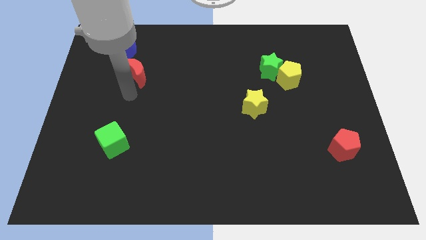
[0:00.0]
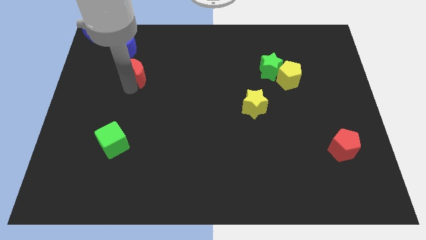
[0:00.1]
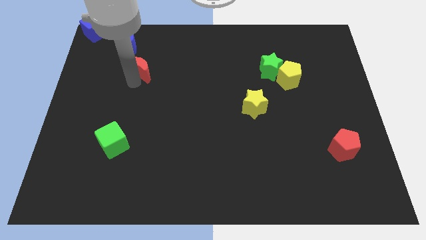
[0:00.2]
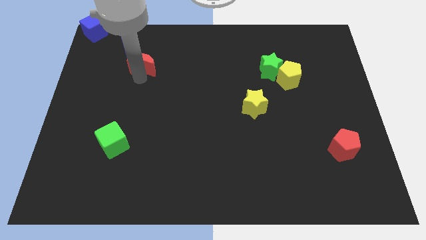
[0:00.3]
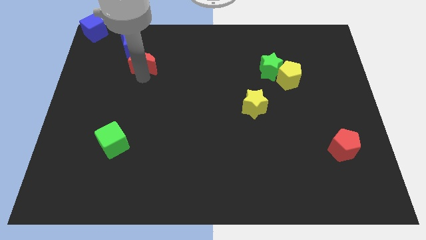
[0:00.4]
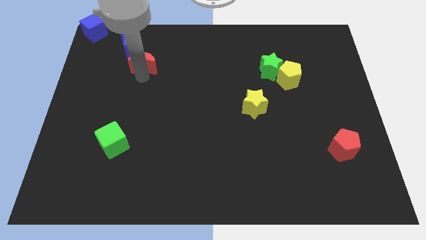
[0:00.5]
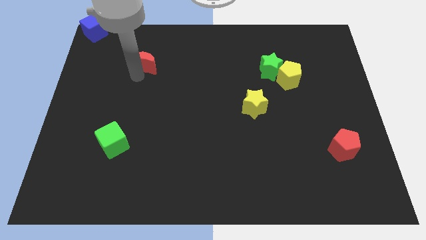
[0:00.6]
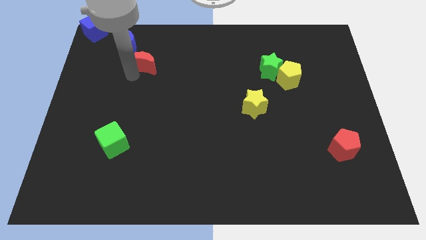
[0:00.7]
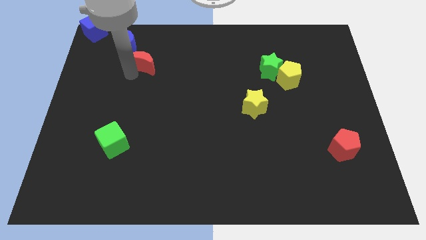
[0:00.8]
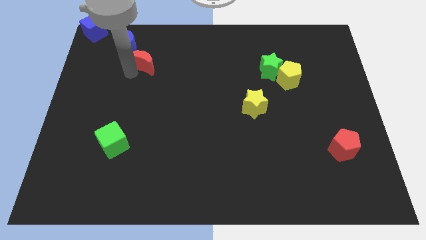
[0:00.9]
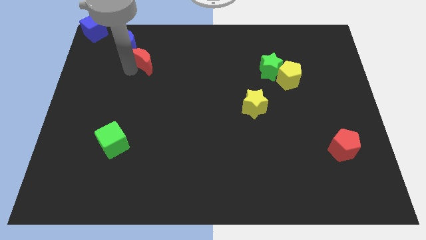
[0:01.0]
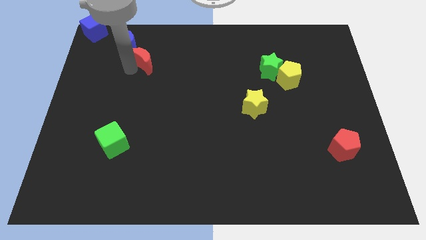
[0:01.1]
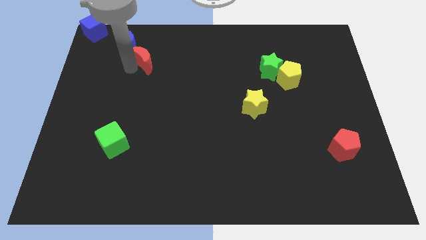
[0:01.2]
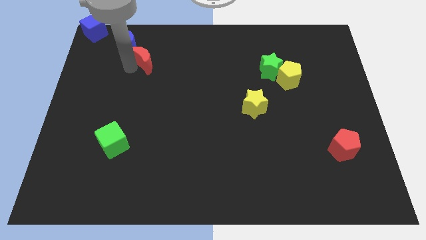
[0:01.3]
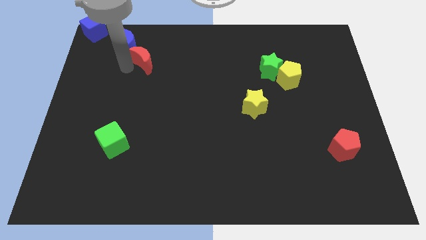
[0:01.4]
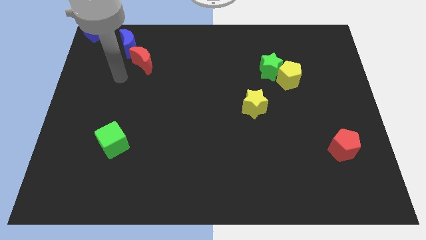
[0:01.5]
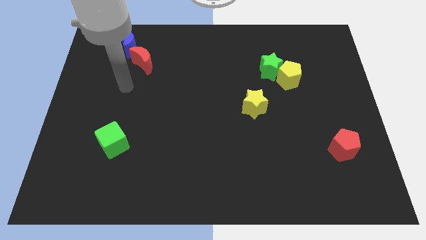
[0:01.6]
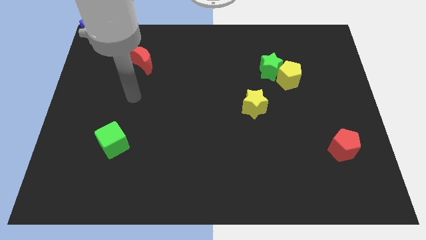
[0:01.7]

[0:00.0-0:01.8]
move the red crescent to the bottom right of the blue crescent

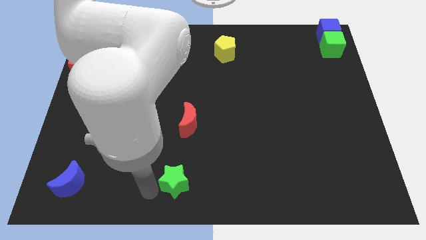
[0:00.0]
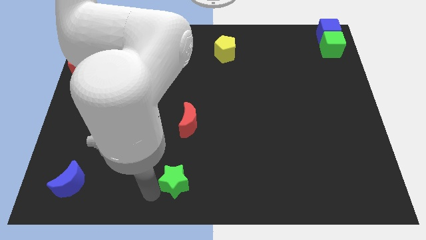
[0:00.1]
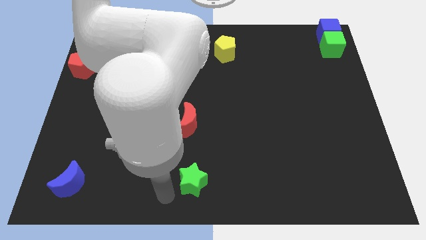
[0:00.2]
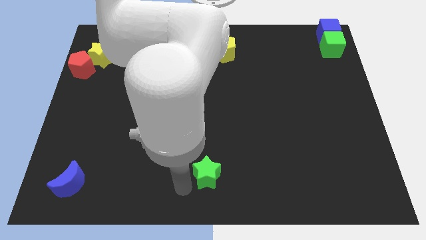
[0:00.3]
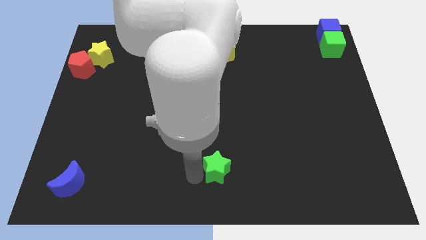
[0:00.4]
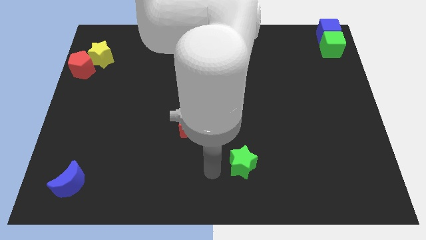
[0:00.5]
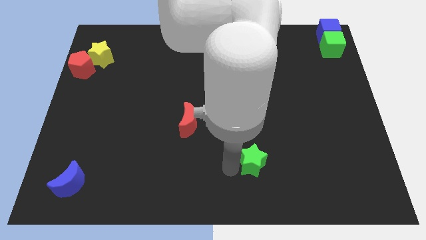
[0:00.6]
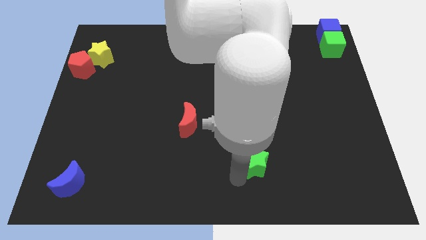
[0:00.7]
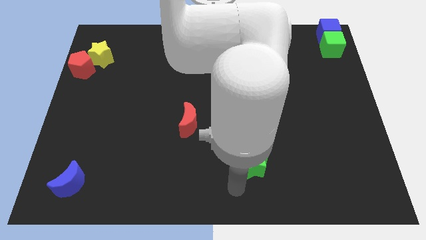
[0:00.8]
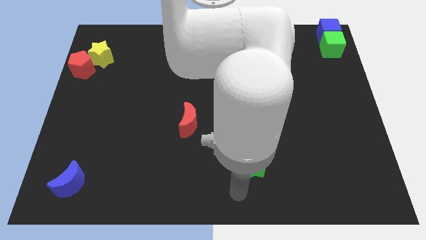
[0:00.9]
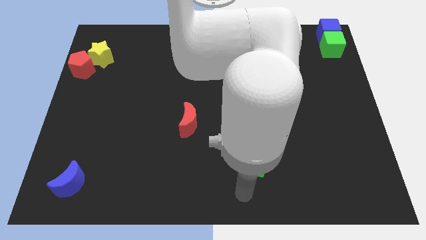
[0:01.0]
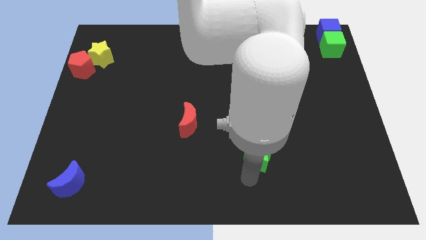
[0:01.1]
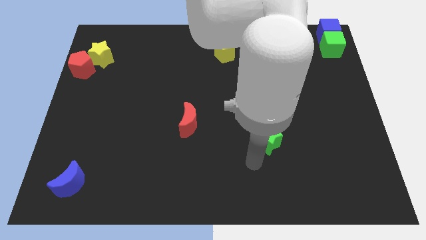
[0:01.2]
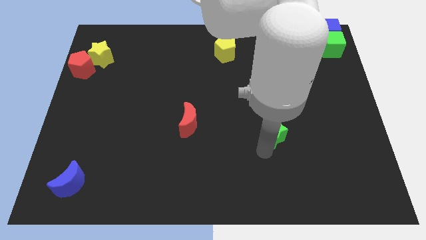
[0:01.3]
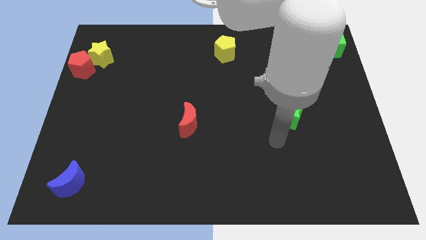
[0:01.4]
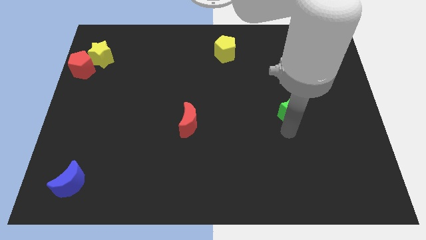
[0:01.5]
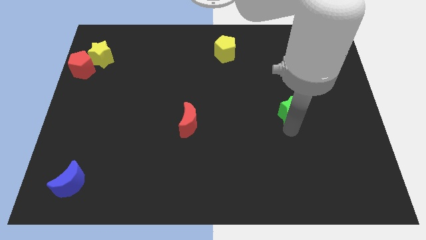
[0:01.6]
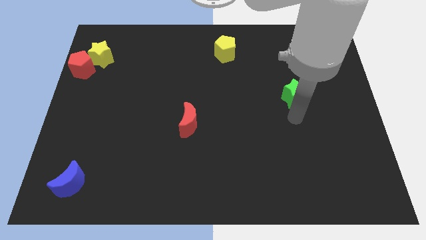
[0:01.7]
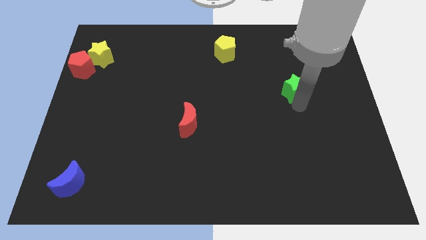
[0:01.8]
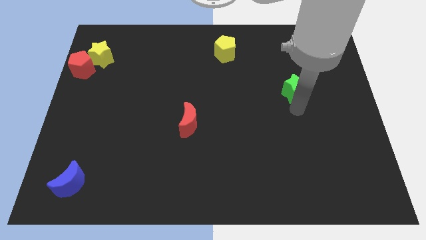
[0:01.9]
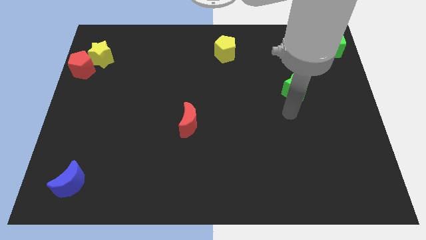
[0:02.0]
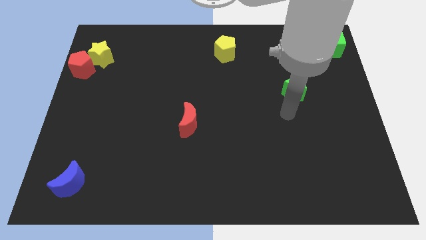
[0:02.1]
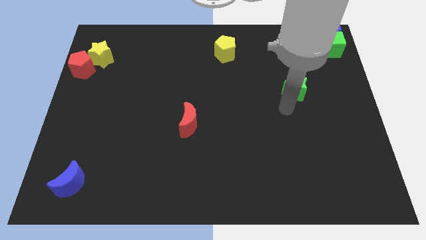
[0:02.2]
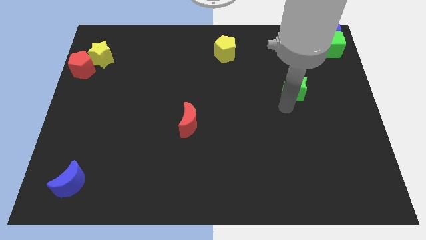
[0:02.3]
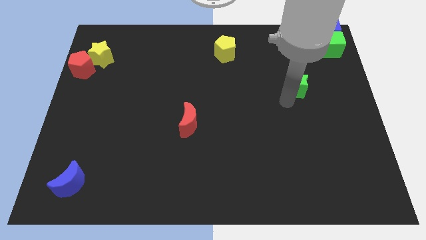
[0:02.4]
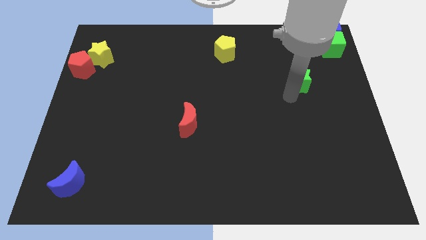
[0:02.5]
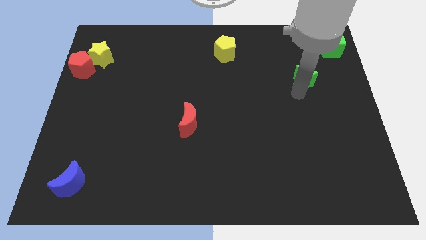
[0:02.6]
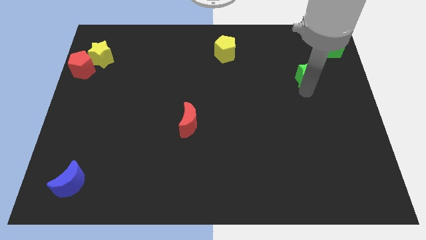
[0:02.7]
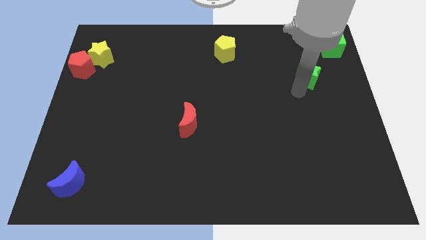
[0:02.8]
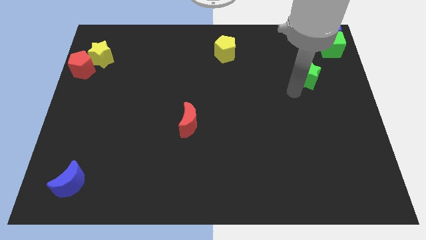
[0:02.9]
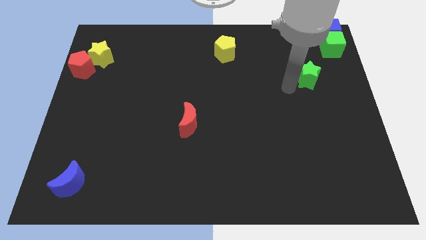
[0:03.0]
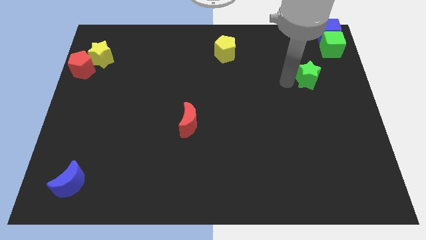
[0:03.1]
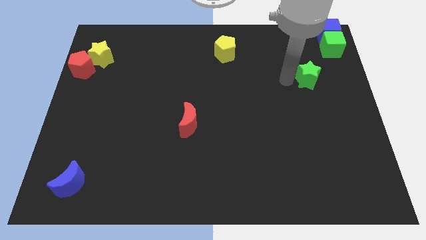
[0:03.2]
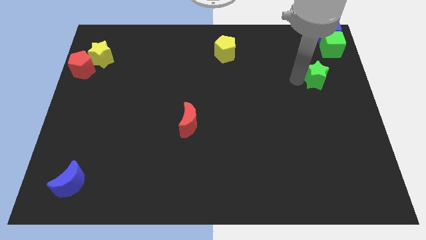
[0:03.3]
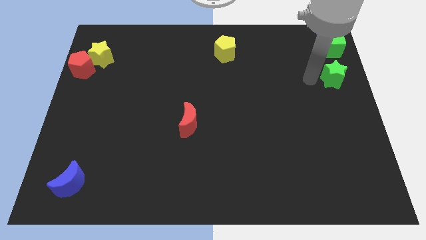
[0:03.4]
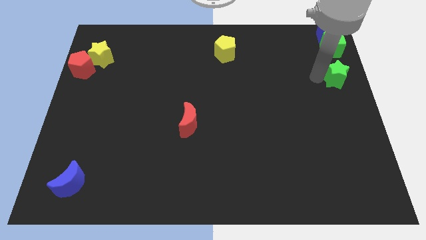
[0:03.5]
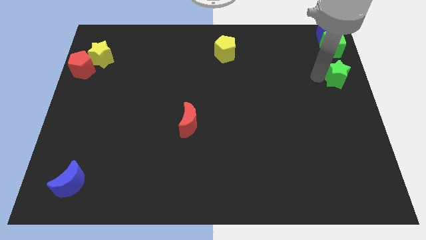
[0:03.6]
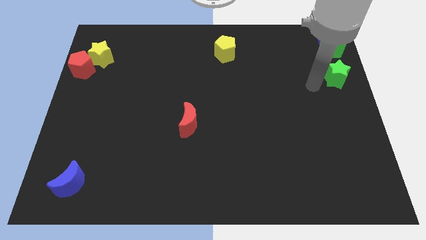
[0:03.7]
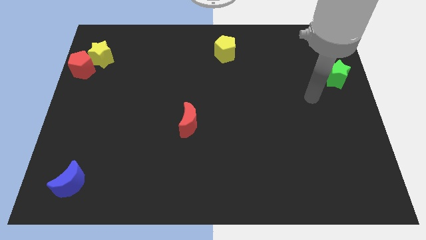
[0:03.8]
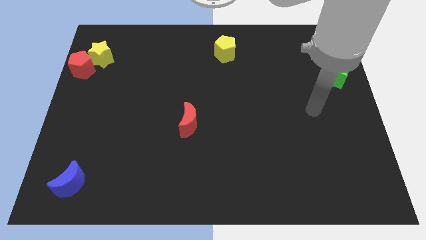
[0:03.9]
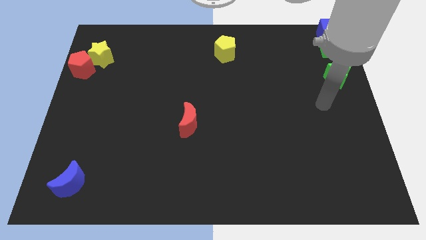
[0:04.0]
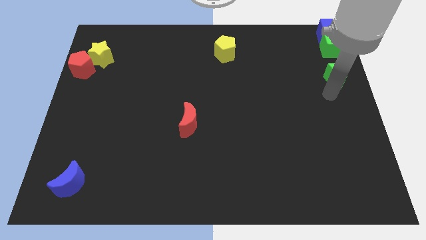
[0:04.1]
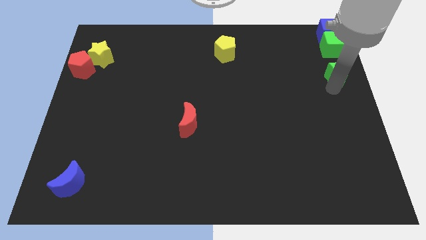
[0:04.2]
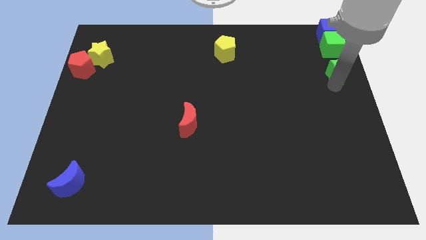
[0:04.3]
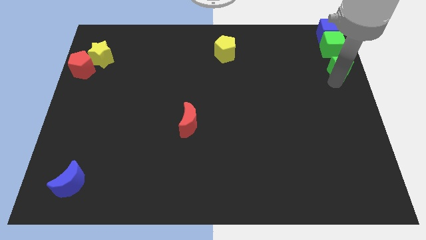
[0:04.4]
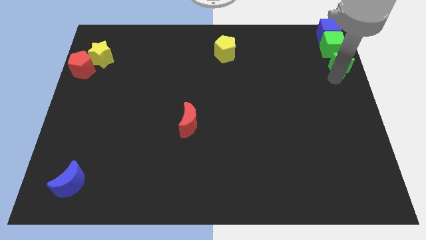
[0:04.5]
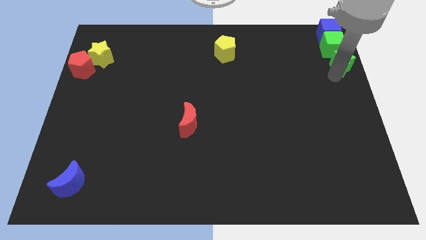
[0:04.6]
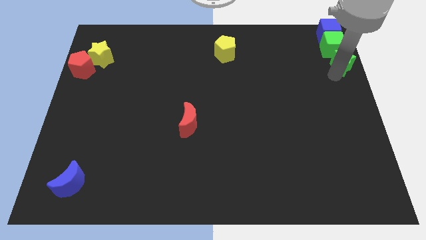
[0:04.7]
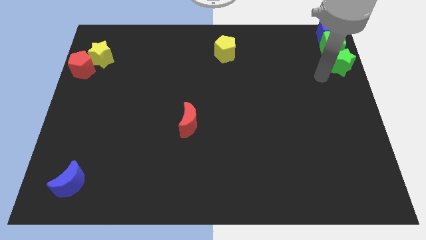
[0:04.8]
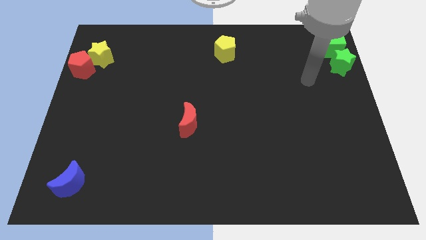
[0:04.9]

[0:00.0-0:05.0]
place the green star to the bottom of the green cube

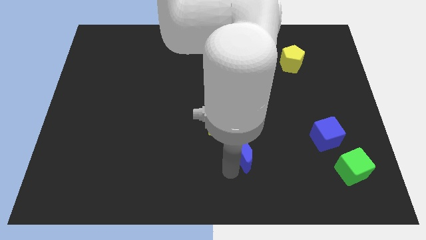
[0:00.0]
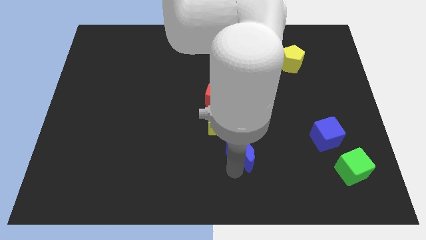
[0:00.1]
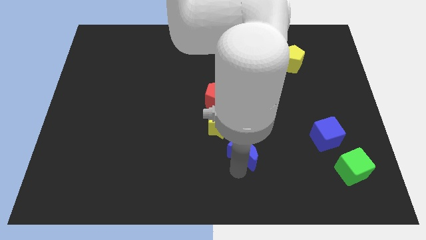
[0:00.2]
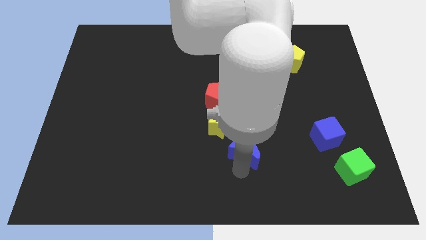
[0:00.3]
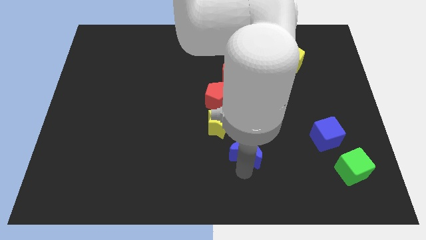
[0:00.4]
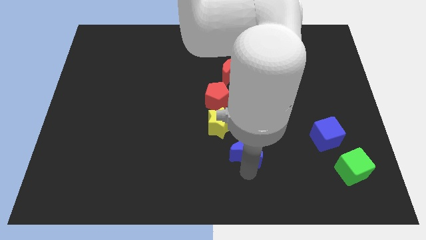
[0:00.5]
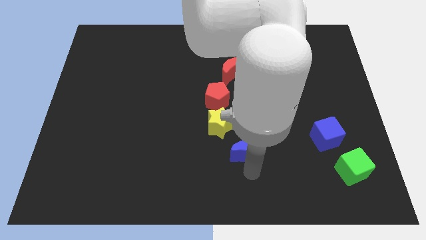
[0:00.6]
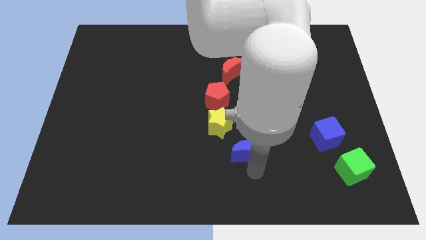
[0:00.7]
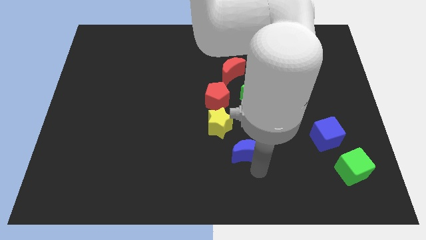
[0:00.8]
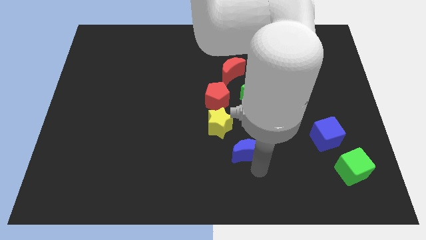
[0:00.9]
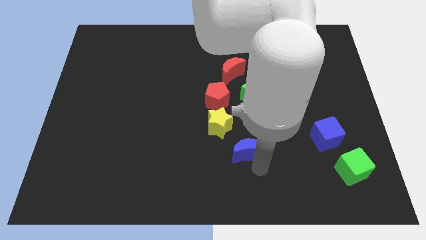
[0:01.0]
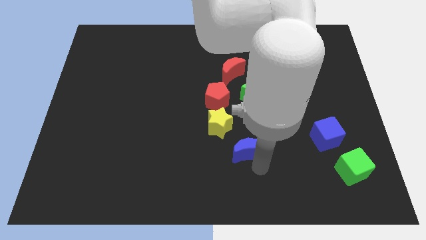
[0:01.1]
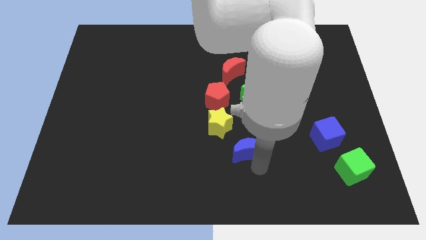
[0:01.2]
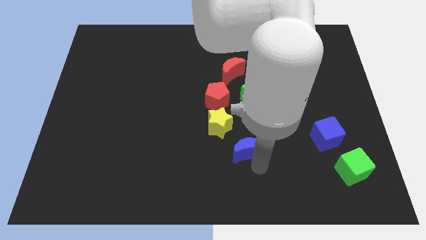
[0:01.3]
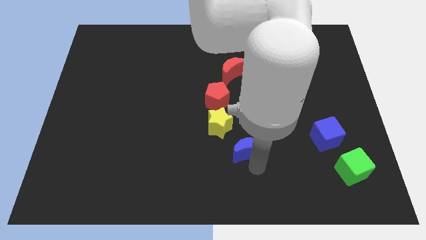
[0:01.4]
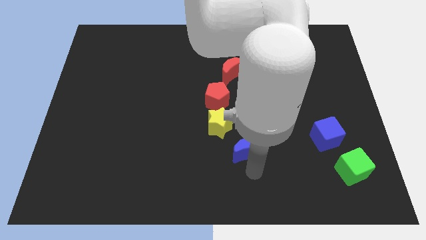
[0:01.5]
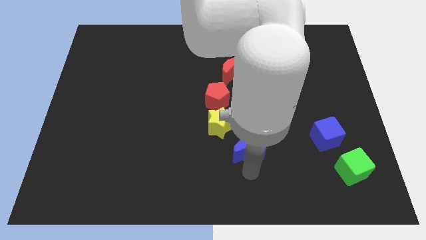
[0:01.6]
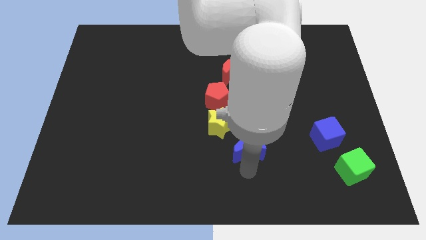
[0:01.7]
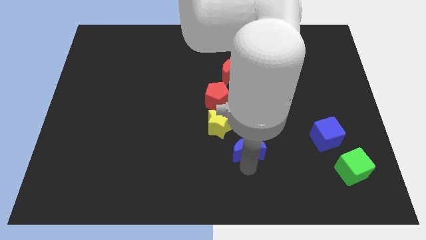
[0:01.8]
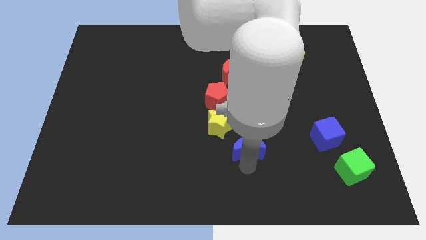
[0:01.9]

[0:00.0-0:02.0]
slide the blue moon diagonally on the bottom right side of the yellow star

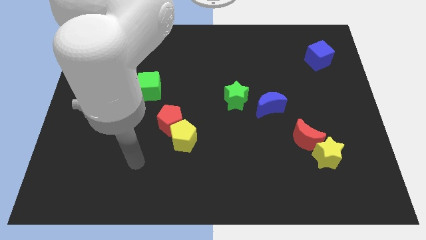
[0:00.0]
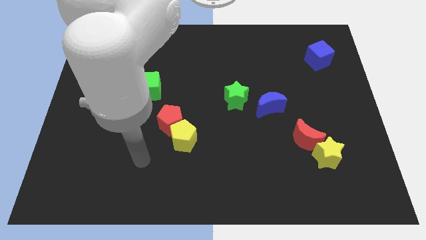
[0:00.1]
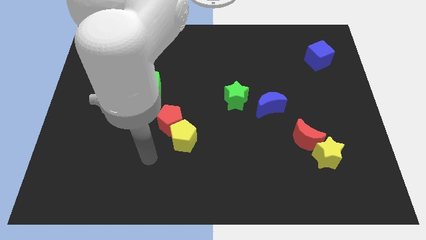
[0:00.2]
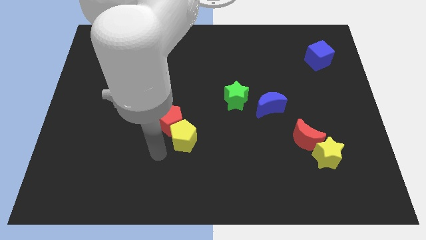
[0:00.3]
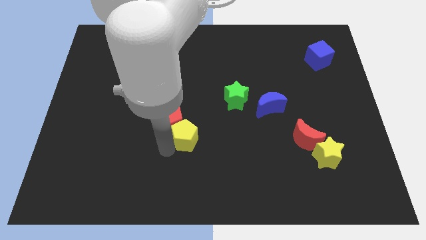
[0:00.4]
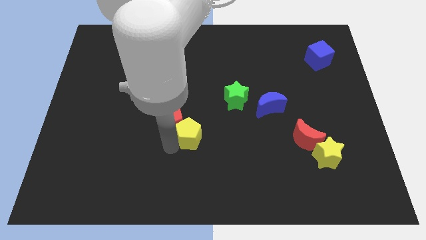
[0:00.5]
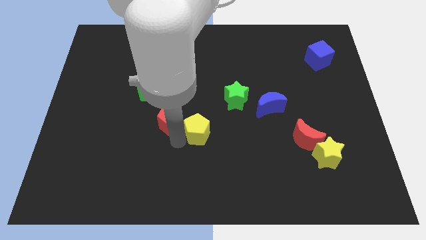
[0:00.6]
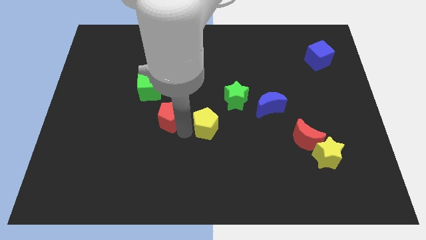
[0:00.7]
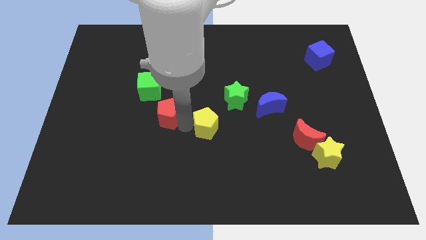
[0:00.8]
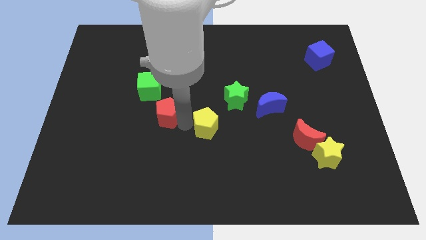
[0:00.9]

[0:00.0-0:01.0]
push the yellow pentagon towards the center of board
